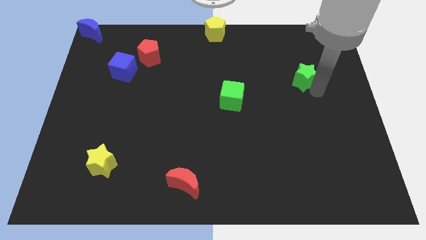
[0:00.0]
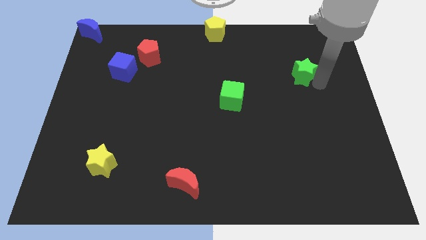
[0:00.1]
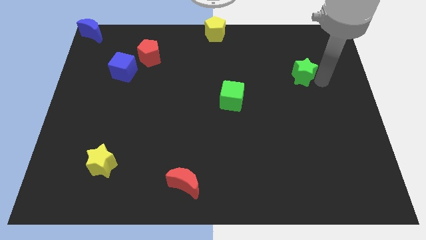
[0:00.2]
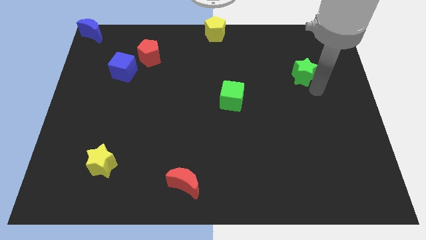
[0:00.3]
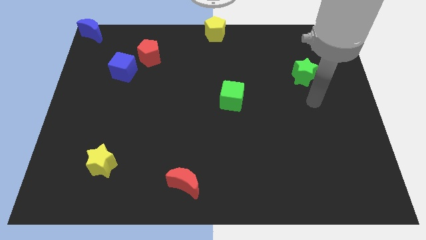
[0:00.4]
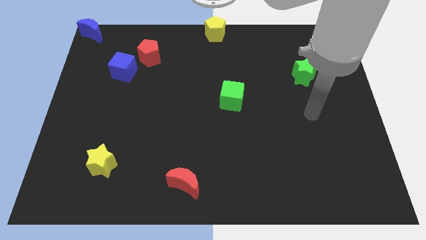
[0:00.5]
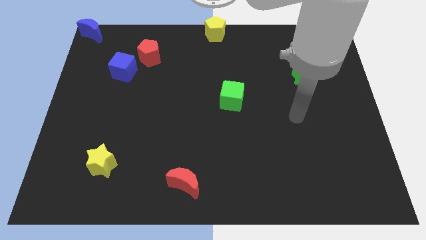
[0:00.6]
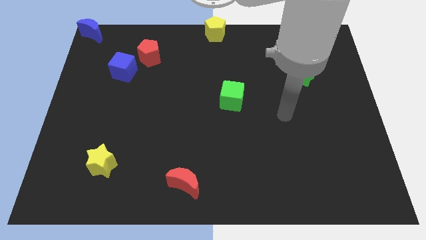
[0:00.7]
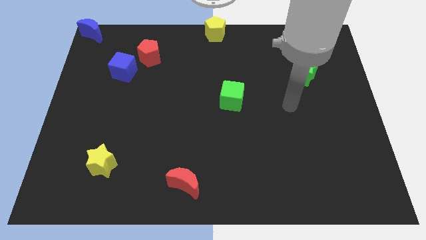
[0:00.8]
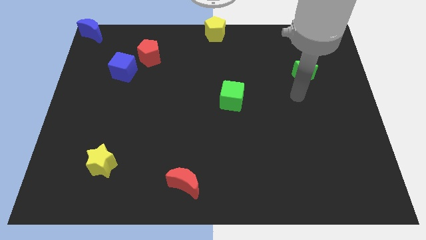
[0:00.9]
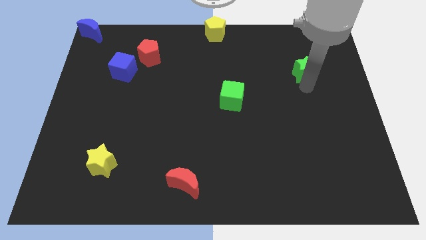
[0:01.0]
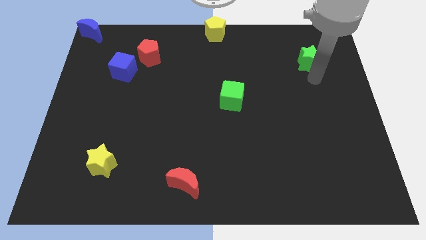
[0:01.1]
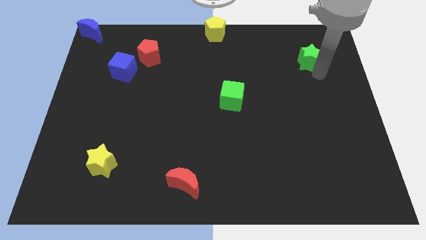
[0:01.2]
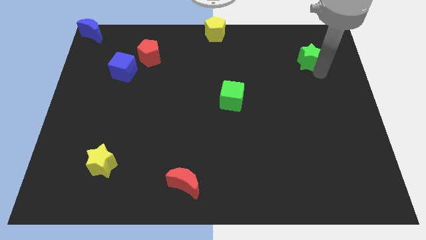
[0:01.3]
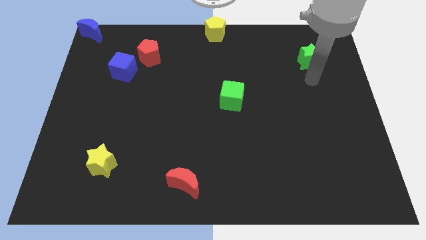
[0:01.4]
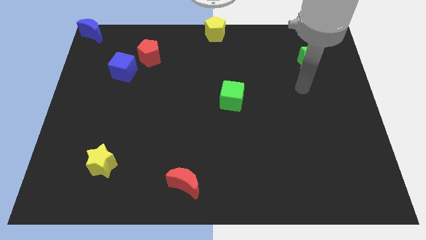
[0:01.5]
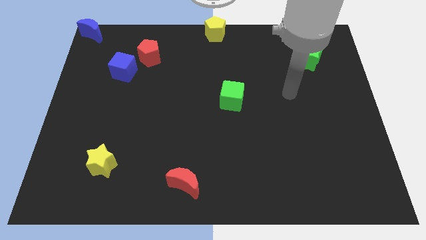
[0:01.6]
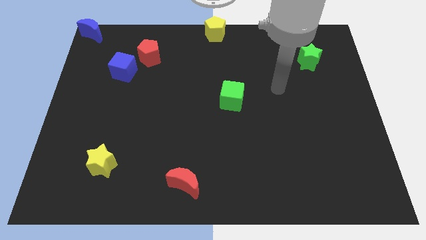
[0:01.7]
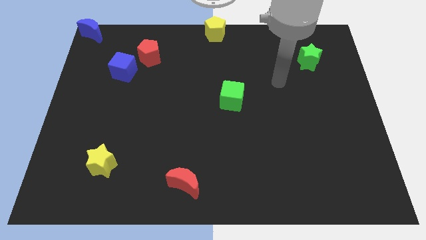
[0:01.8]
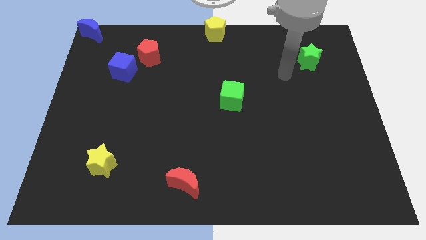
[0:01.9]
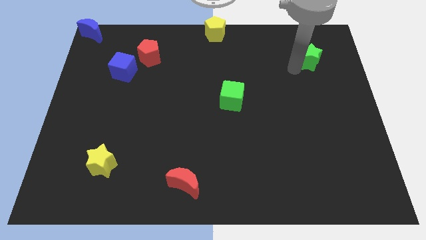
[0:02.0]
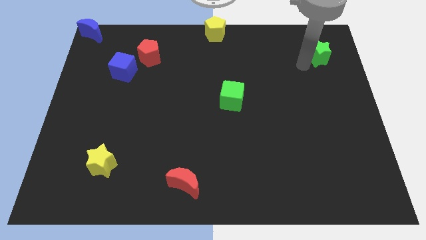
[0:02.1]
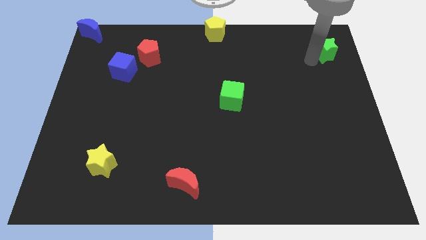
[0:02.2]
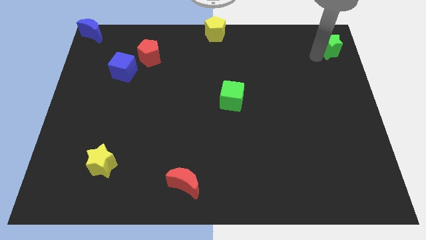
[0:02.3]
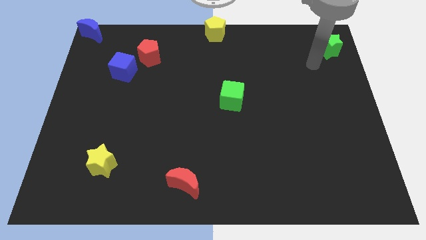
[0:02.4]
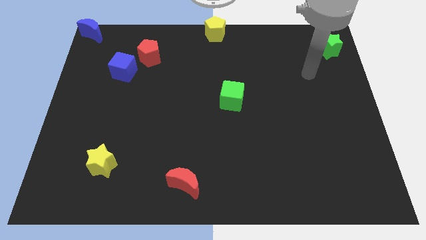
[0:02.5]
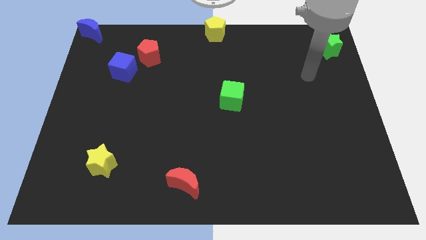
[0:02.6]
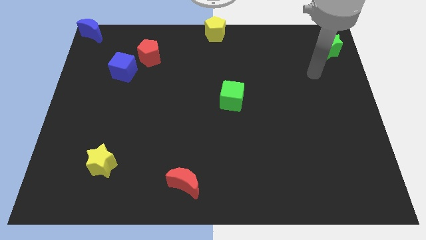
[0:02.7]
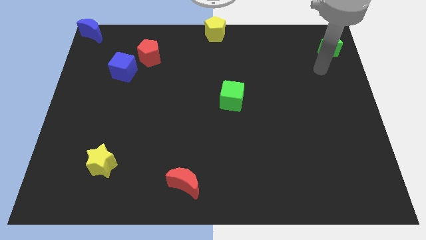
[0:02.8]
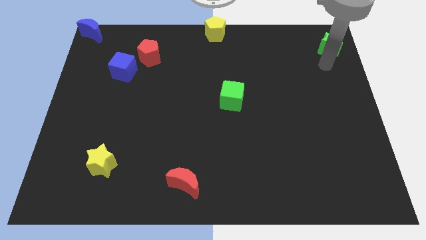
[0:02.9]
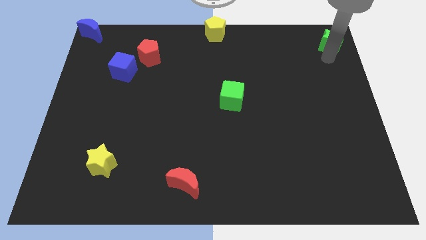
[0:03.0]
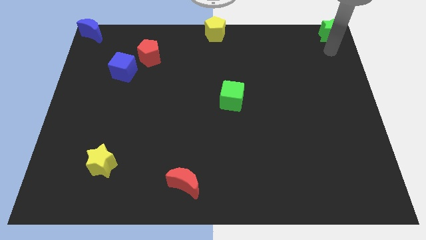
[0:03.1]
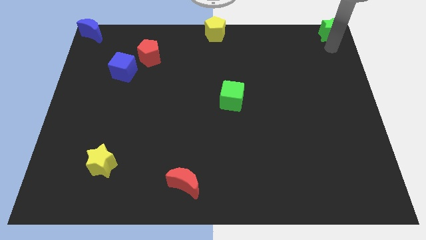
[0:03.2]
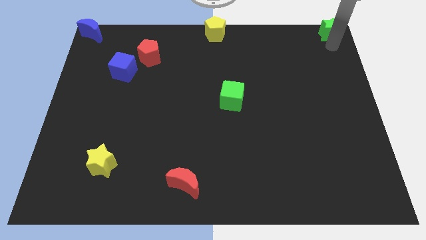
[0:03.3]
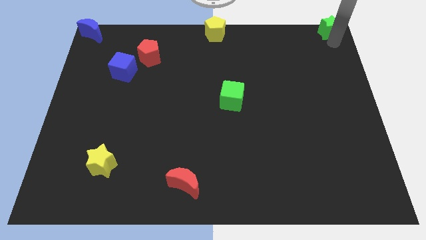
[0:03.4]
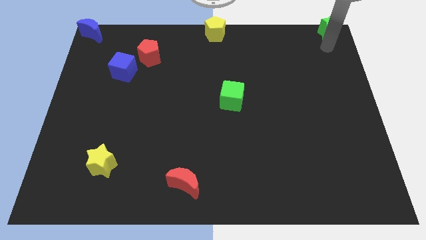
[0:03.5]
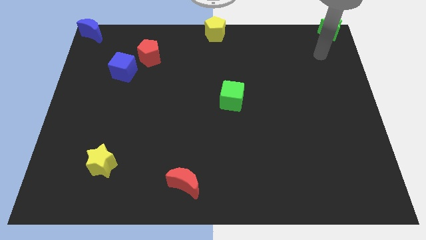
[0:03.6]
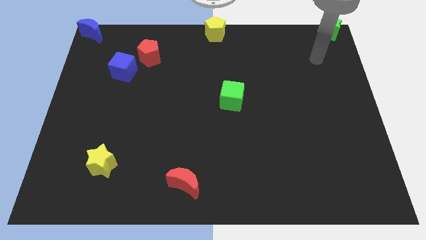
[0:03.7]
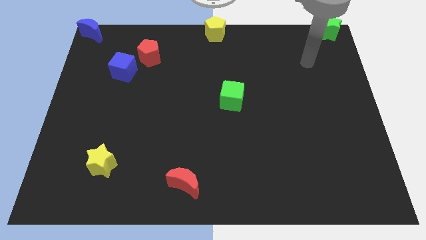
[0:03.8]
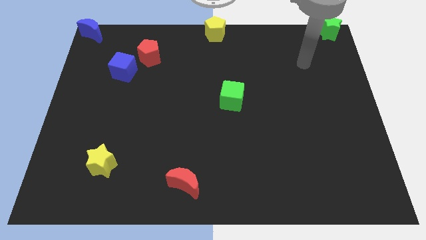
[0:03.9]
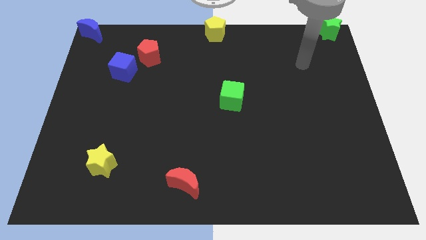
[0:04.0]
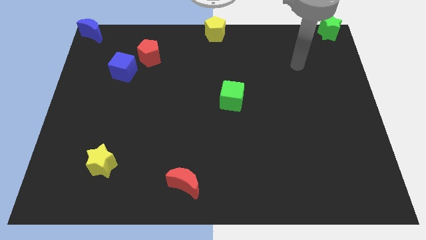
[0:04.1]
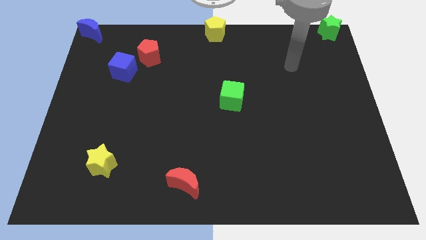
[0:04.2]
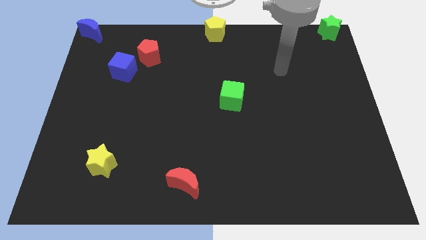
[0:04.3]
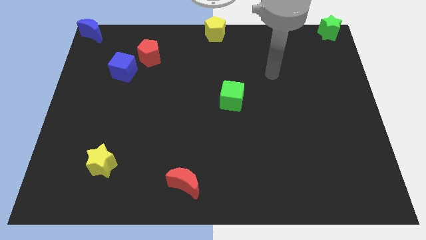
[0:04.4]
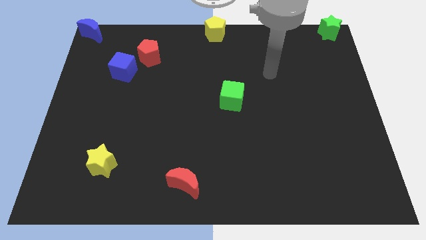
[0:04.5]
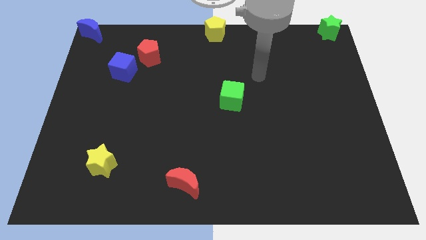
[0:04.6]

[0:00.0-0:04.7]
place the green star at the top right corner of the board

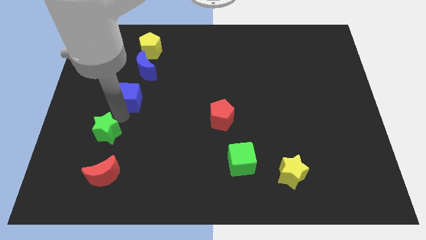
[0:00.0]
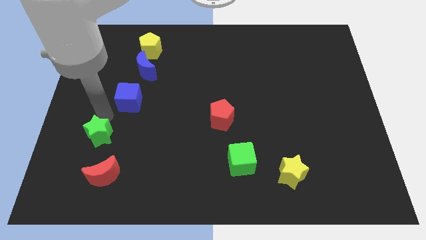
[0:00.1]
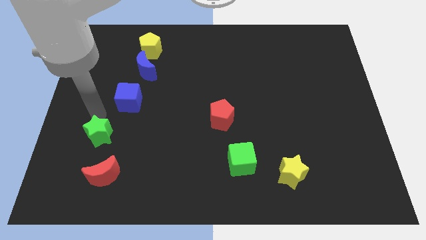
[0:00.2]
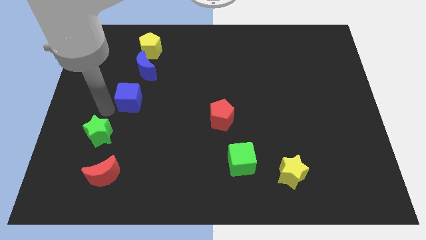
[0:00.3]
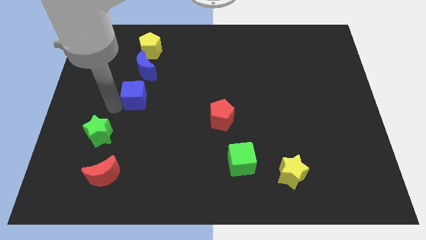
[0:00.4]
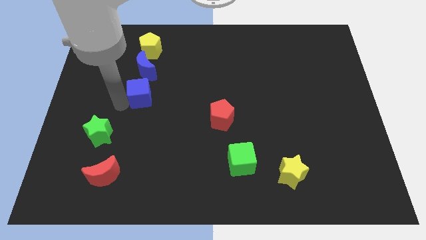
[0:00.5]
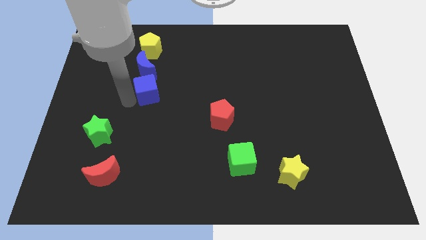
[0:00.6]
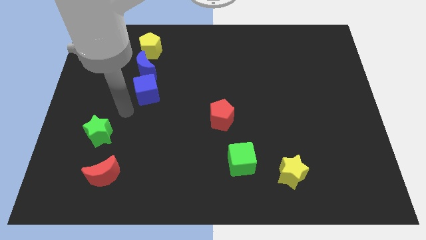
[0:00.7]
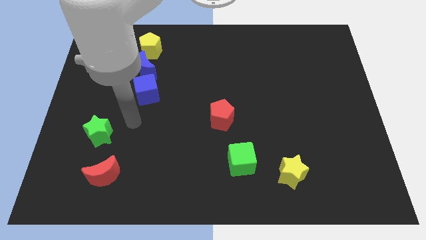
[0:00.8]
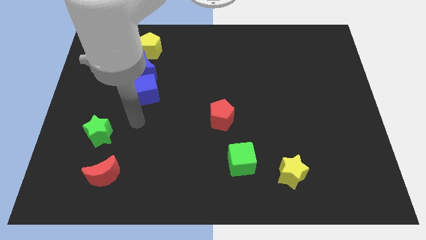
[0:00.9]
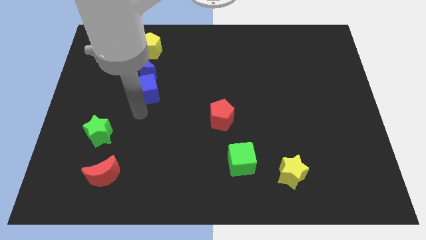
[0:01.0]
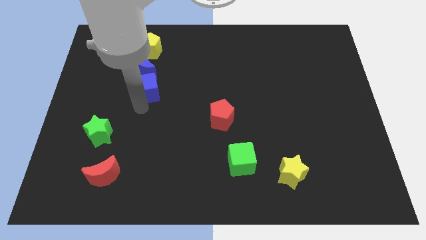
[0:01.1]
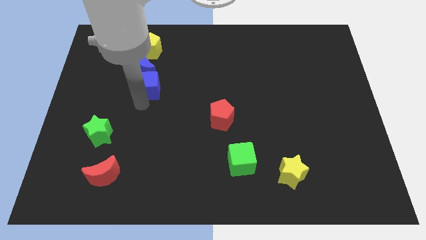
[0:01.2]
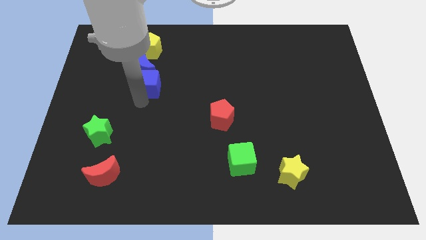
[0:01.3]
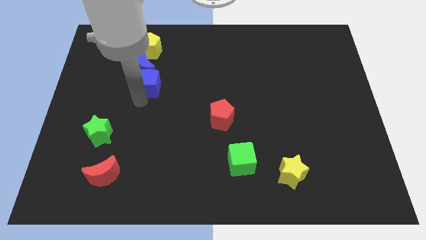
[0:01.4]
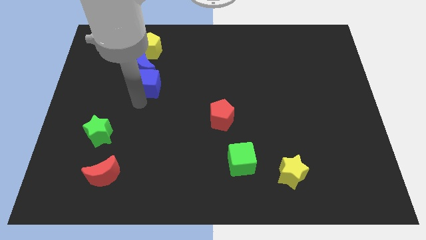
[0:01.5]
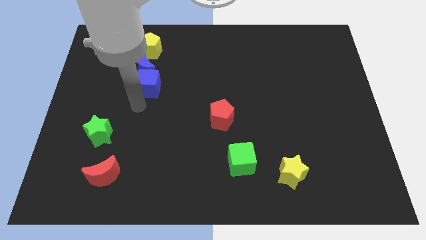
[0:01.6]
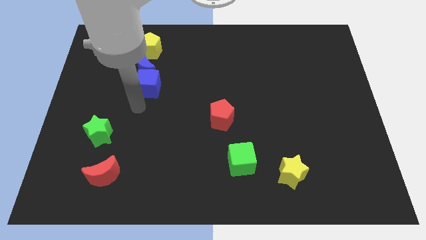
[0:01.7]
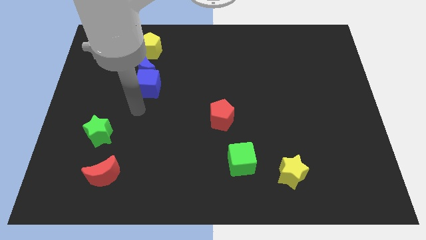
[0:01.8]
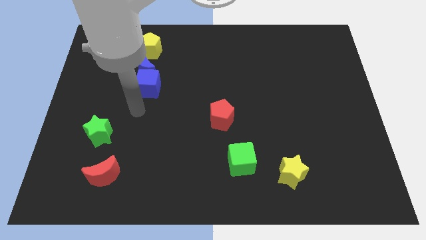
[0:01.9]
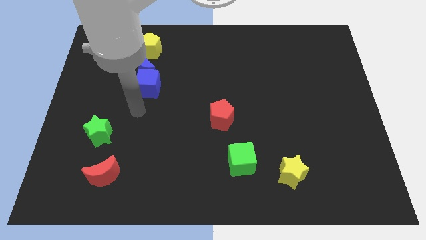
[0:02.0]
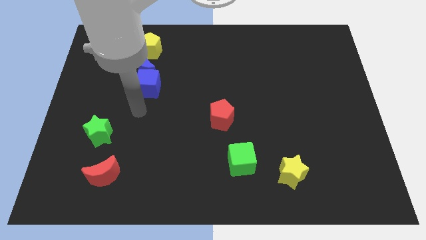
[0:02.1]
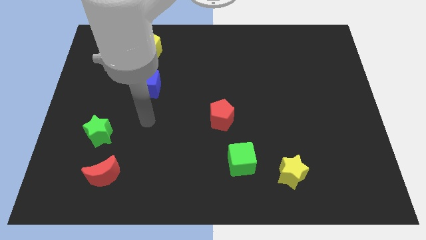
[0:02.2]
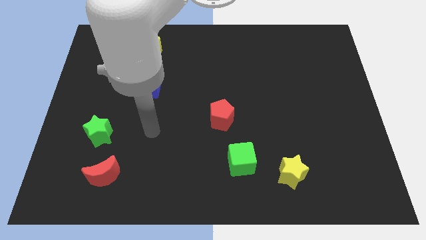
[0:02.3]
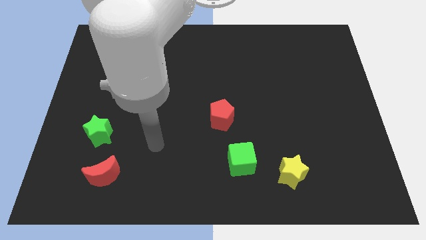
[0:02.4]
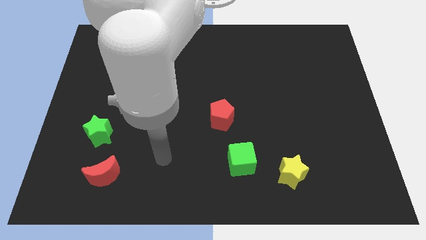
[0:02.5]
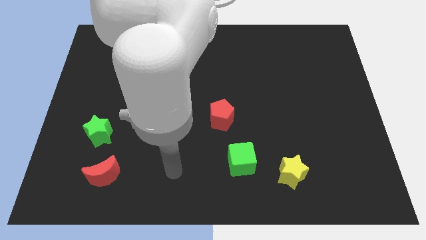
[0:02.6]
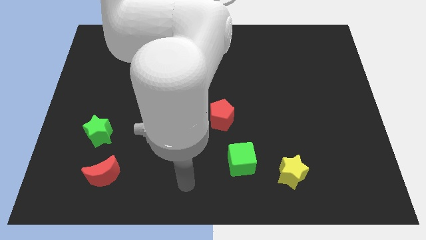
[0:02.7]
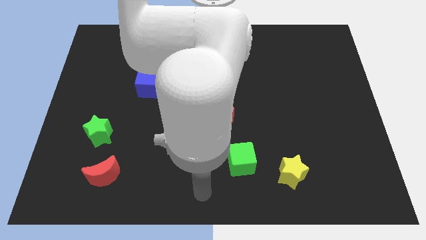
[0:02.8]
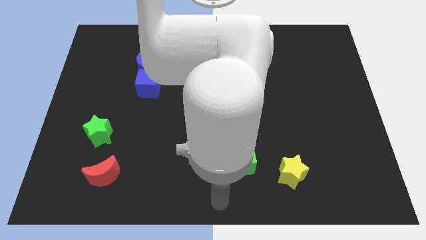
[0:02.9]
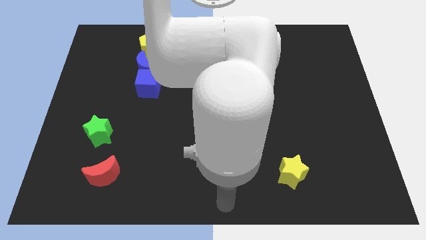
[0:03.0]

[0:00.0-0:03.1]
place the blue cube into the bottom of blue crescent

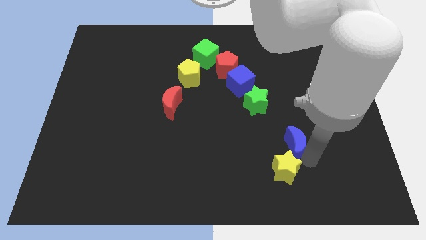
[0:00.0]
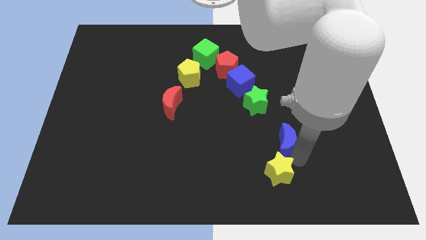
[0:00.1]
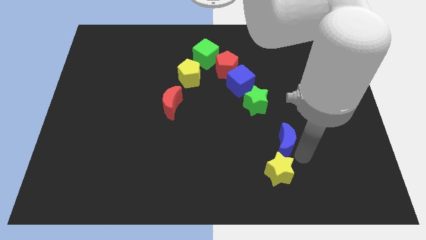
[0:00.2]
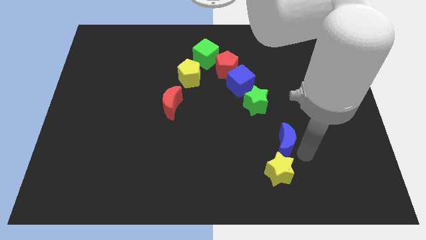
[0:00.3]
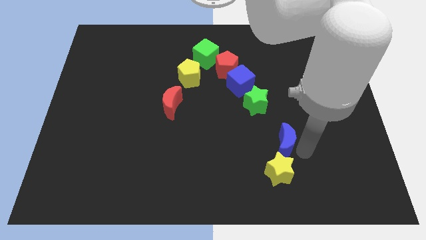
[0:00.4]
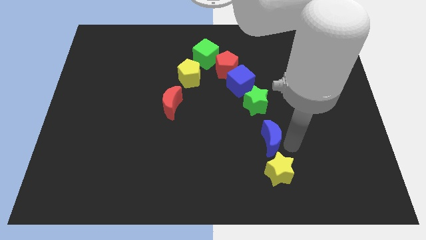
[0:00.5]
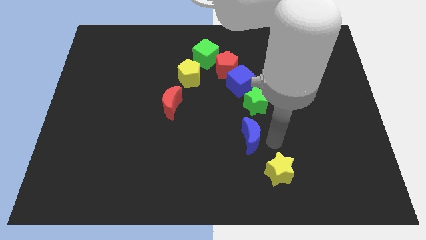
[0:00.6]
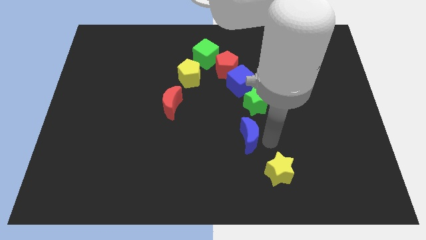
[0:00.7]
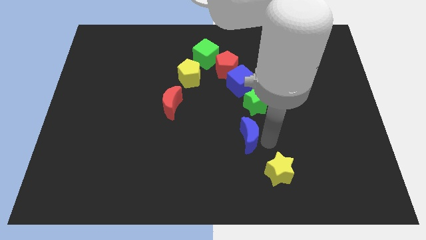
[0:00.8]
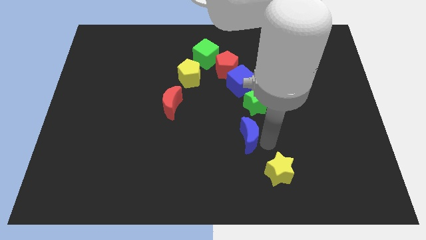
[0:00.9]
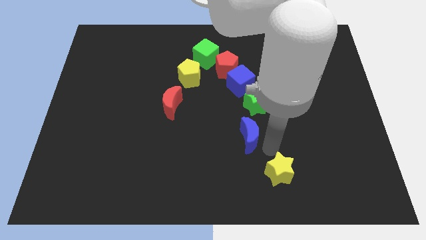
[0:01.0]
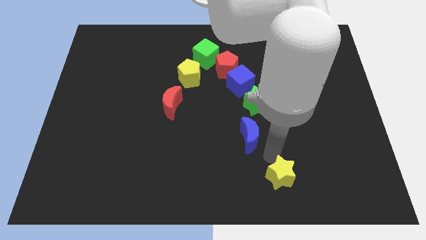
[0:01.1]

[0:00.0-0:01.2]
separate the blue moon and yellow star
